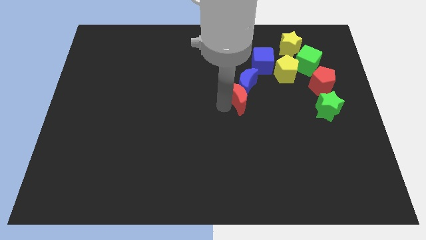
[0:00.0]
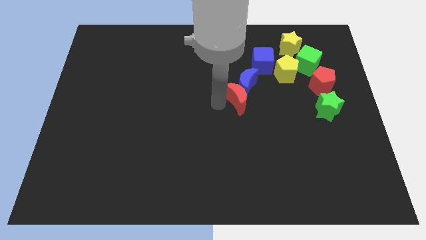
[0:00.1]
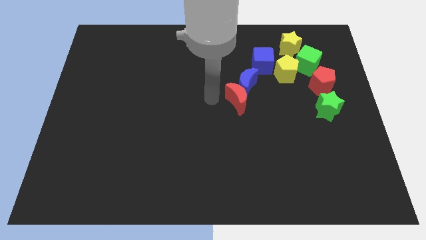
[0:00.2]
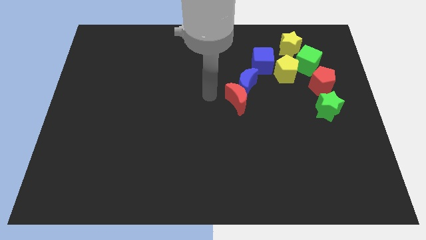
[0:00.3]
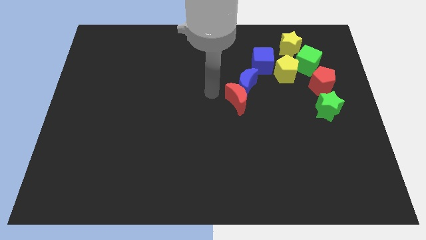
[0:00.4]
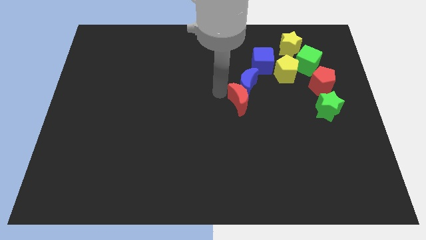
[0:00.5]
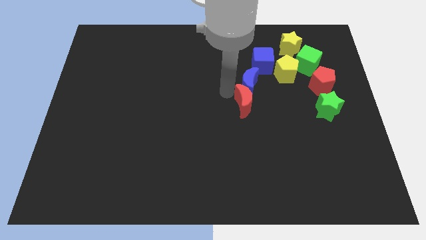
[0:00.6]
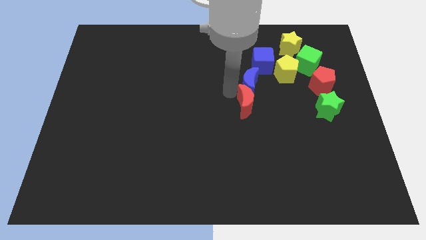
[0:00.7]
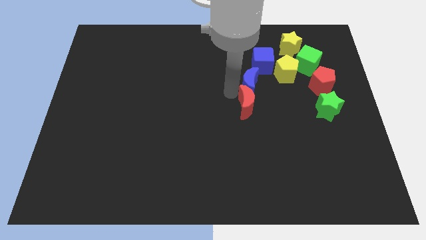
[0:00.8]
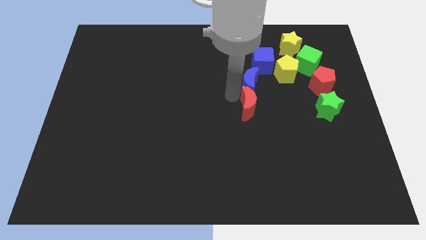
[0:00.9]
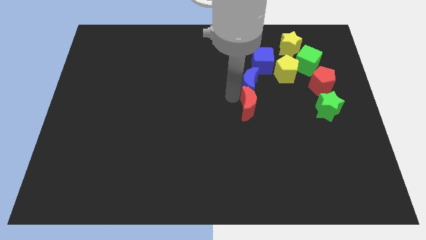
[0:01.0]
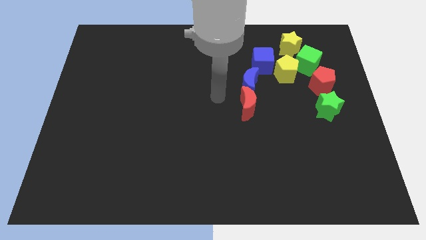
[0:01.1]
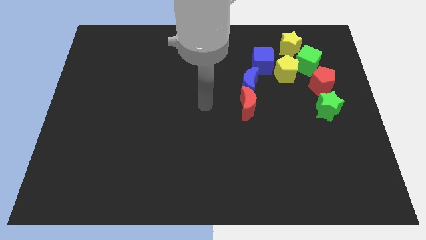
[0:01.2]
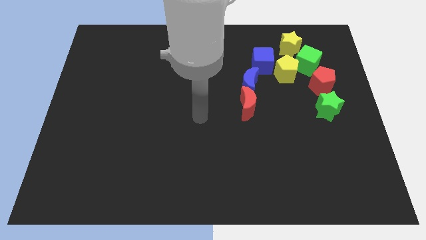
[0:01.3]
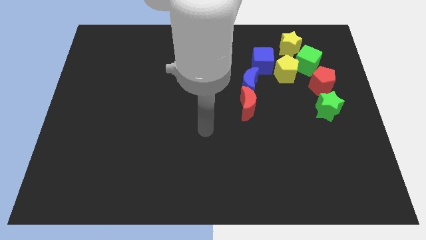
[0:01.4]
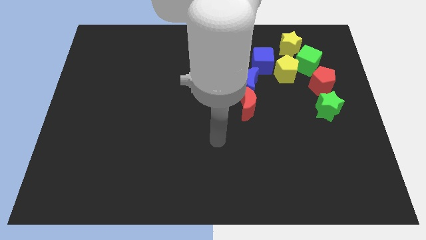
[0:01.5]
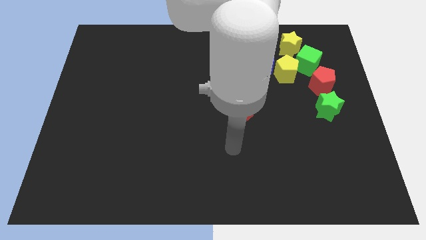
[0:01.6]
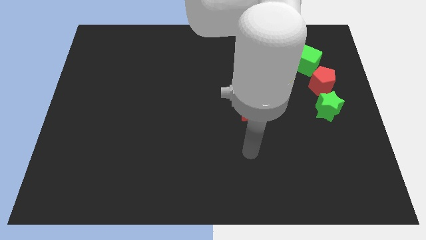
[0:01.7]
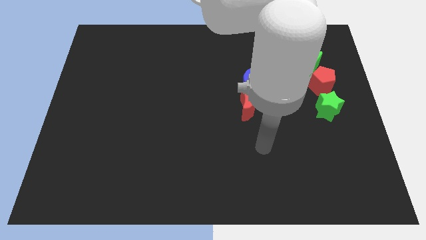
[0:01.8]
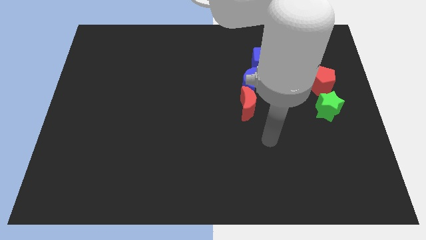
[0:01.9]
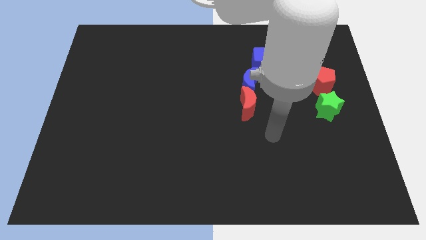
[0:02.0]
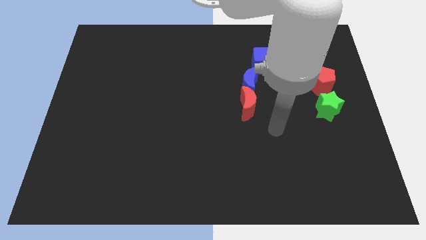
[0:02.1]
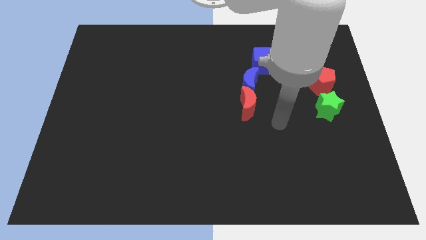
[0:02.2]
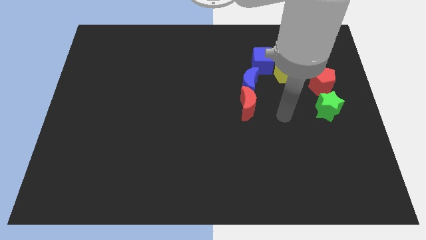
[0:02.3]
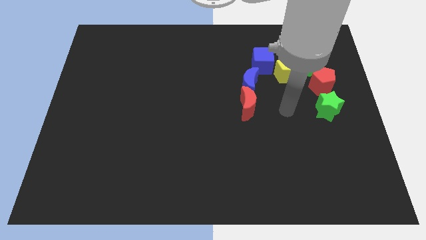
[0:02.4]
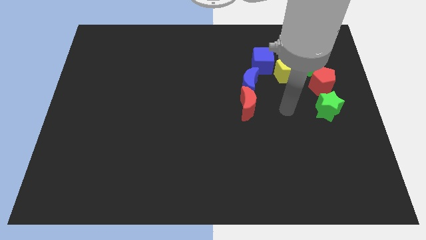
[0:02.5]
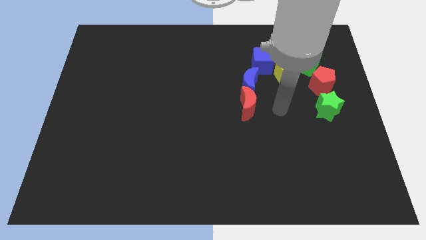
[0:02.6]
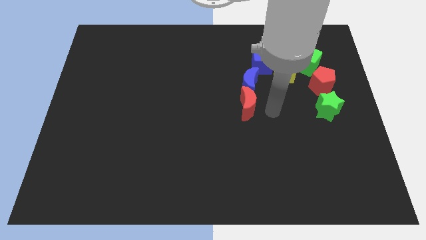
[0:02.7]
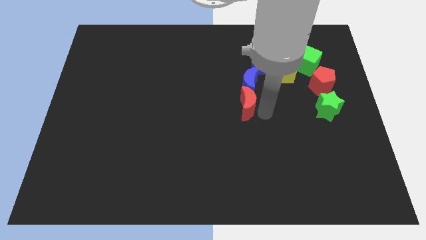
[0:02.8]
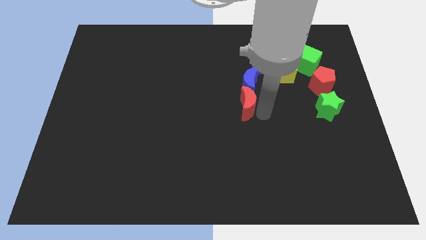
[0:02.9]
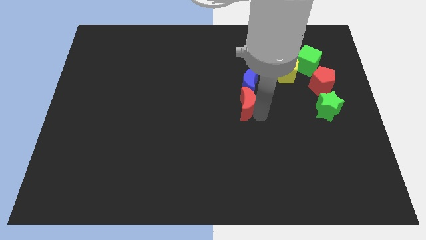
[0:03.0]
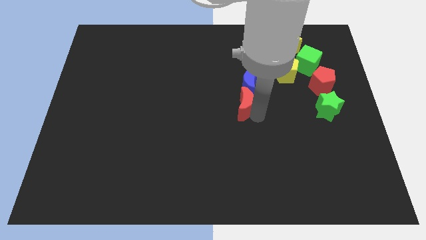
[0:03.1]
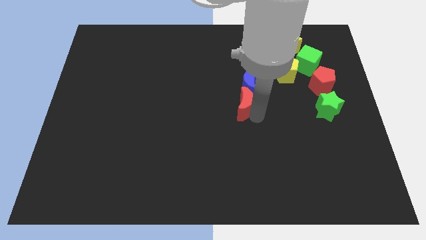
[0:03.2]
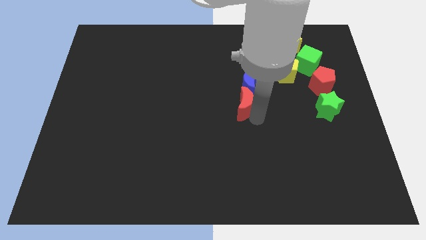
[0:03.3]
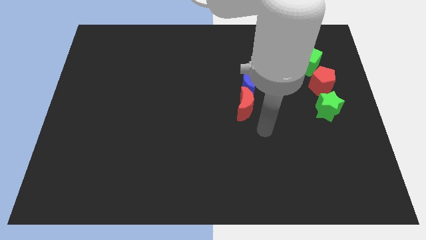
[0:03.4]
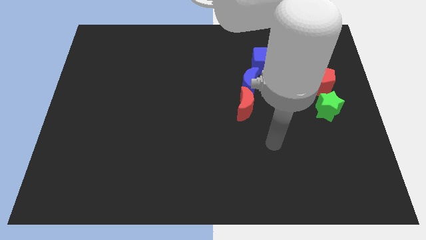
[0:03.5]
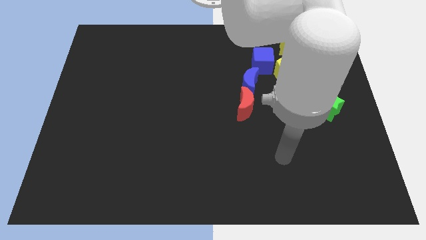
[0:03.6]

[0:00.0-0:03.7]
adjust the red crescent to the bottom of the blue crescent

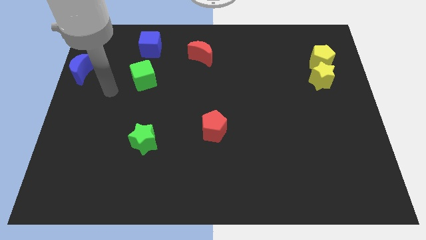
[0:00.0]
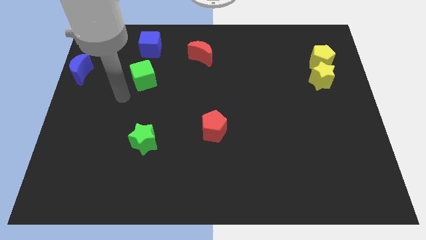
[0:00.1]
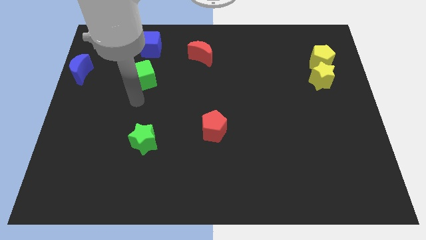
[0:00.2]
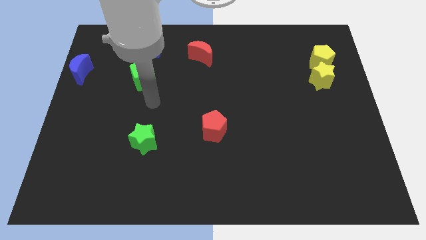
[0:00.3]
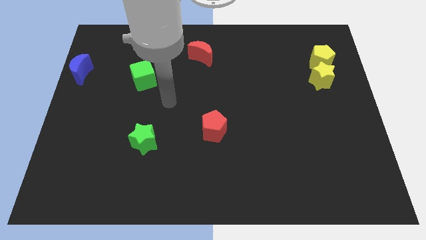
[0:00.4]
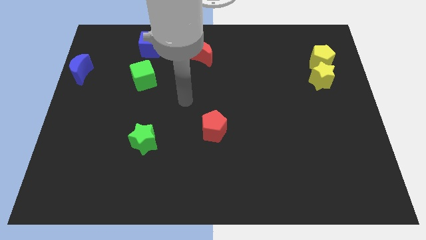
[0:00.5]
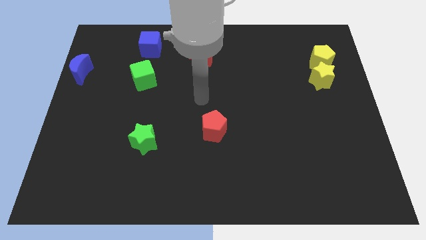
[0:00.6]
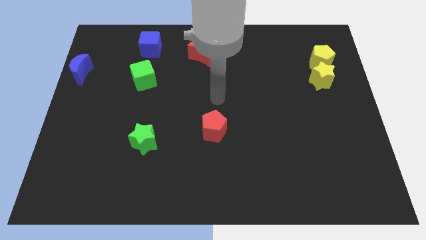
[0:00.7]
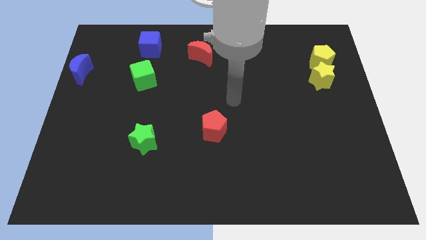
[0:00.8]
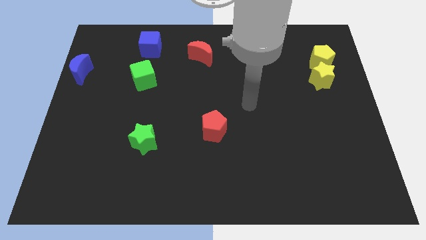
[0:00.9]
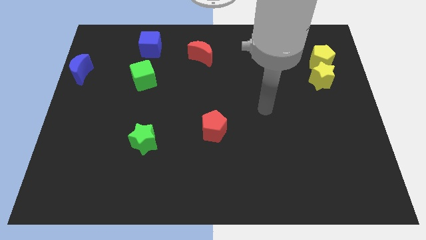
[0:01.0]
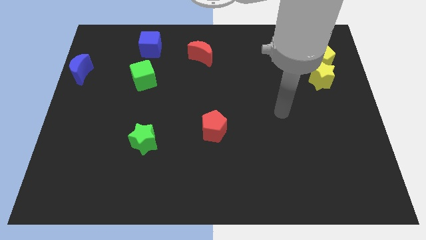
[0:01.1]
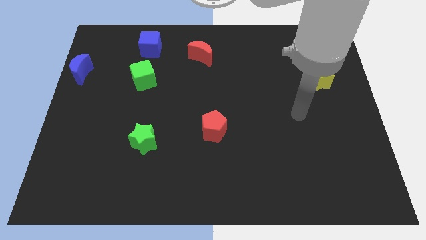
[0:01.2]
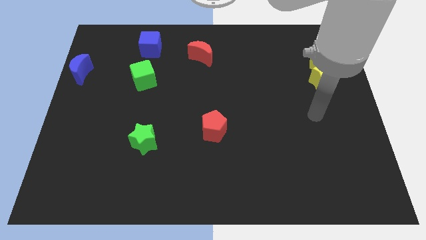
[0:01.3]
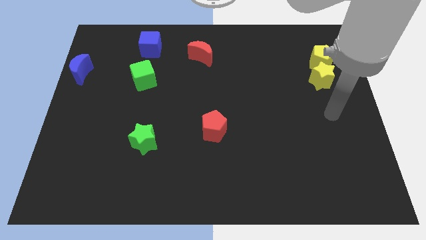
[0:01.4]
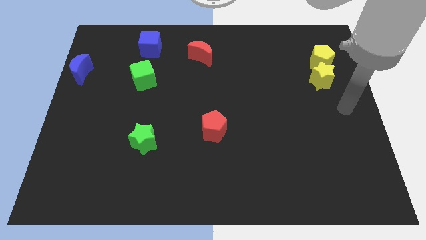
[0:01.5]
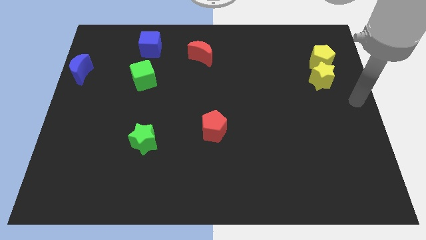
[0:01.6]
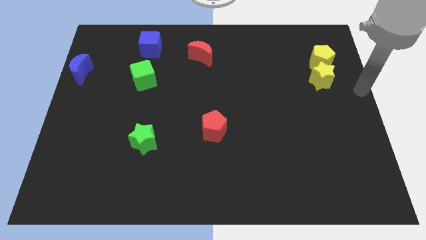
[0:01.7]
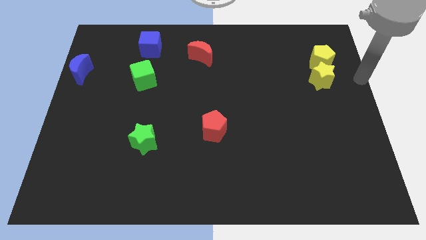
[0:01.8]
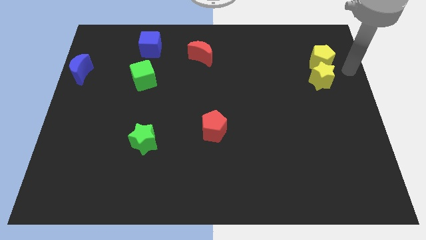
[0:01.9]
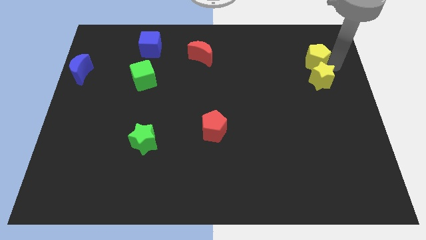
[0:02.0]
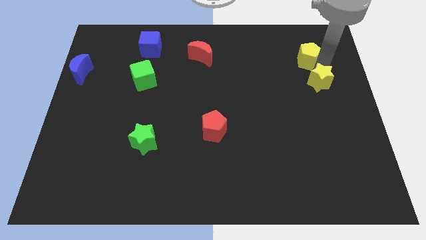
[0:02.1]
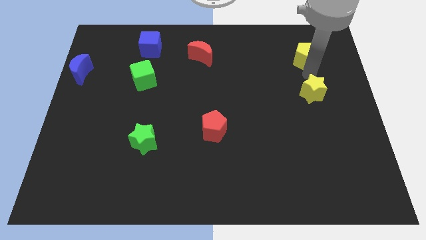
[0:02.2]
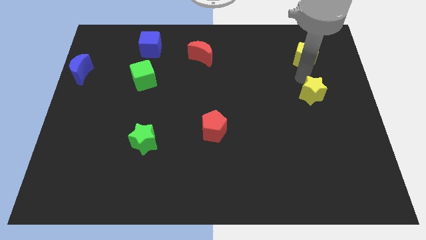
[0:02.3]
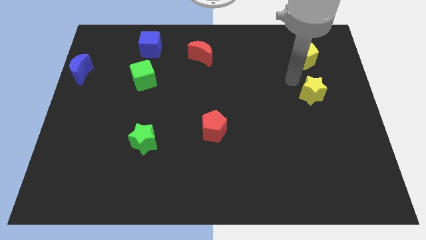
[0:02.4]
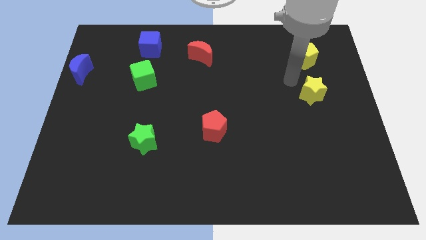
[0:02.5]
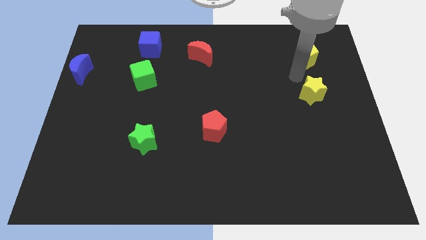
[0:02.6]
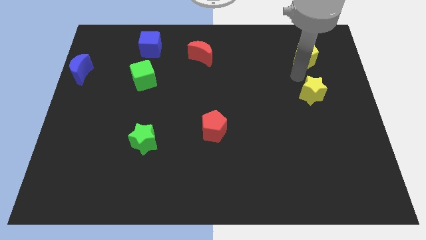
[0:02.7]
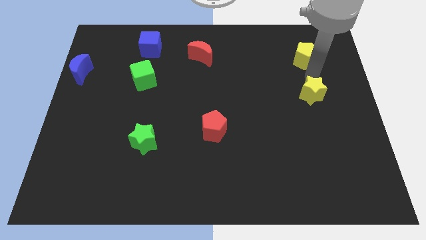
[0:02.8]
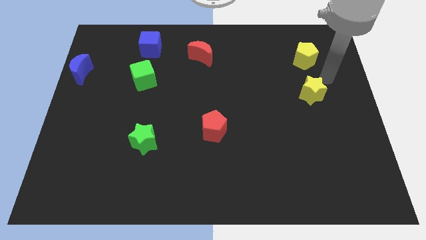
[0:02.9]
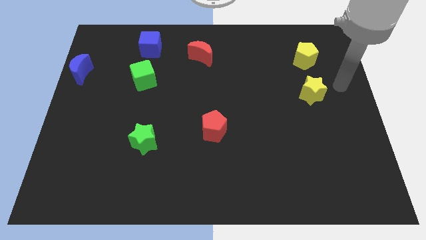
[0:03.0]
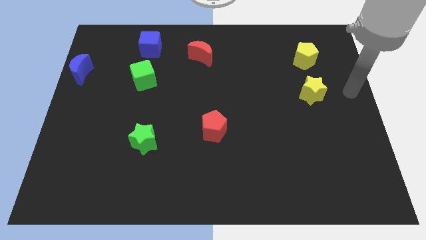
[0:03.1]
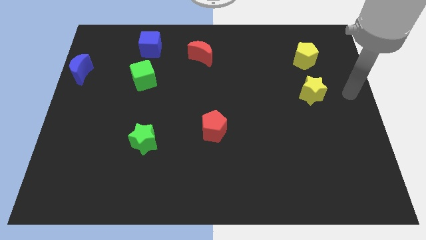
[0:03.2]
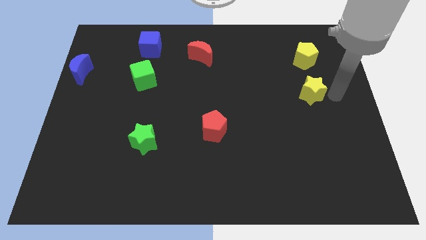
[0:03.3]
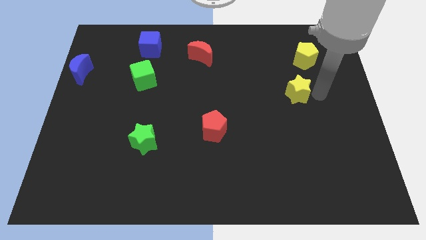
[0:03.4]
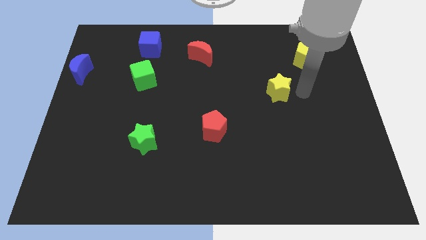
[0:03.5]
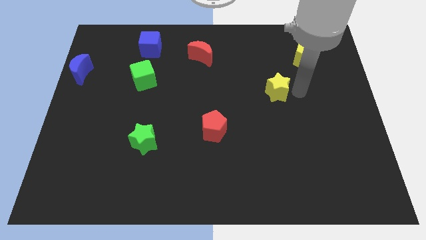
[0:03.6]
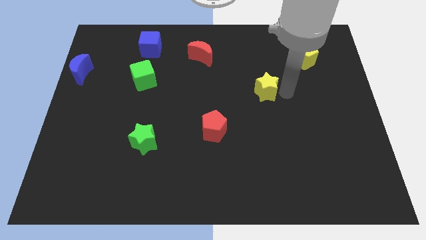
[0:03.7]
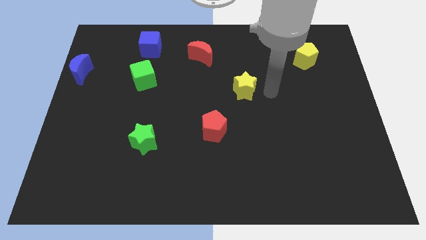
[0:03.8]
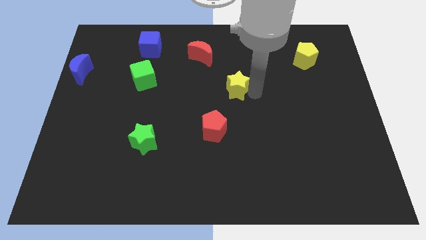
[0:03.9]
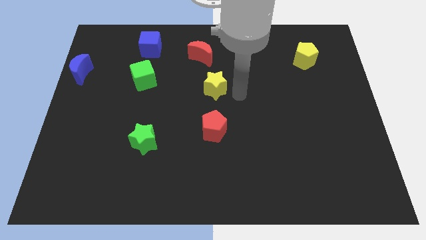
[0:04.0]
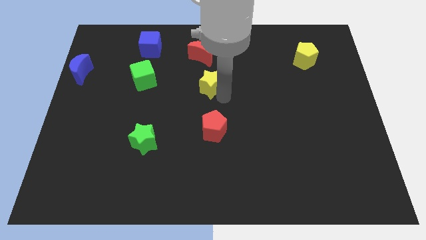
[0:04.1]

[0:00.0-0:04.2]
push the yellow star to the center of the board

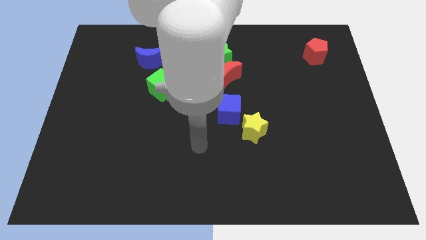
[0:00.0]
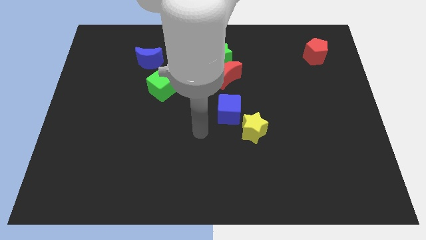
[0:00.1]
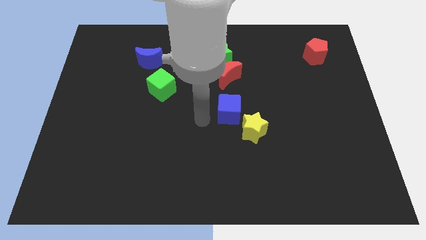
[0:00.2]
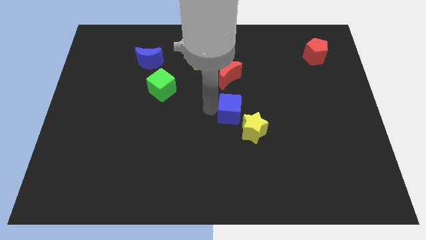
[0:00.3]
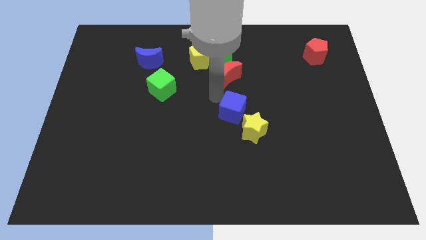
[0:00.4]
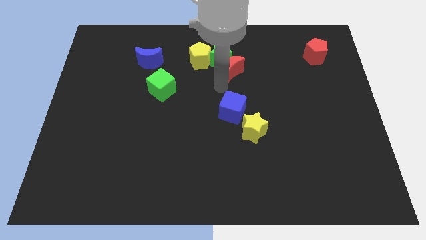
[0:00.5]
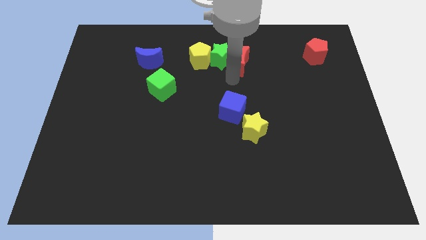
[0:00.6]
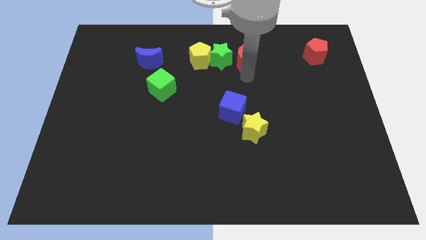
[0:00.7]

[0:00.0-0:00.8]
slightly move the red crescent to the right of the green star

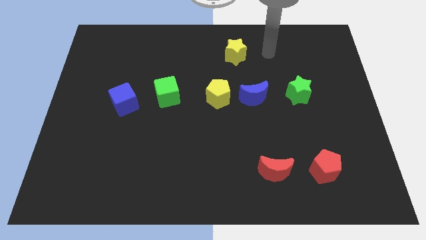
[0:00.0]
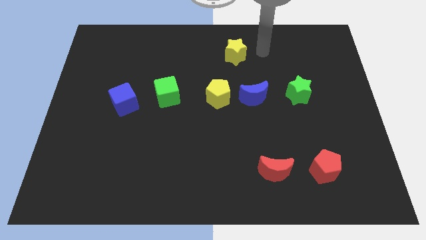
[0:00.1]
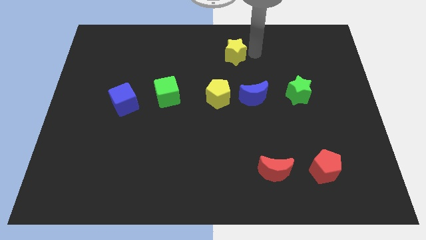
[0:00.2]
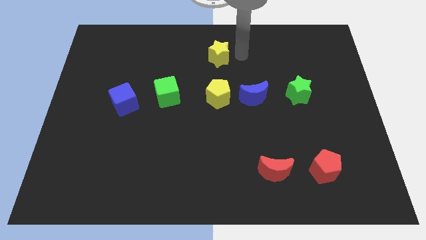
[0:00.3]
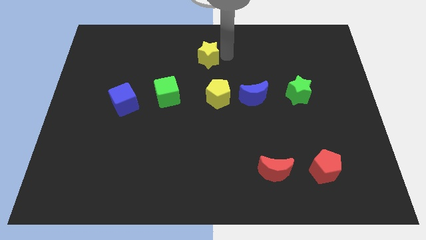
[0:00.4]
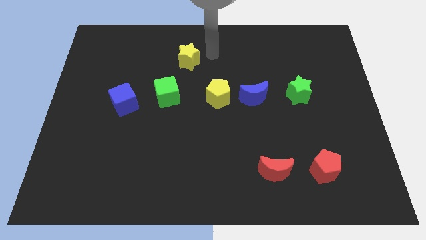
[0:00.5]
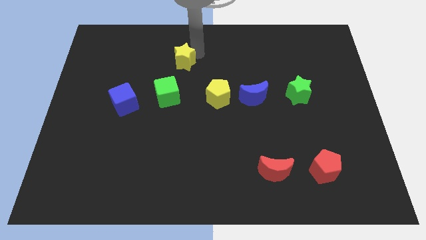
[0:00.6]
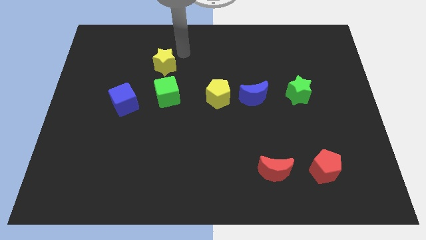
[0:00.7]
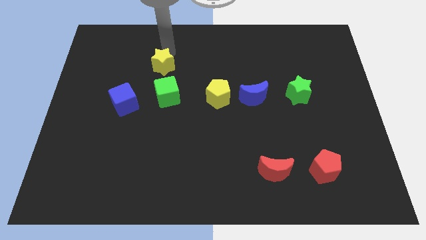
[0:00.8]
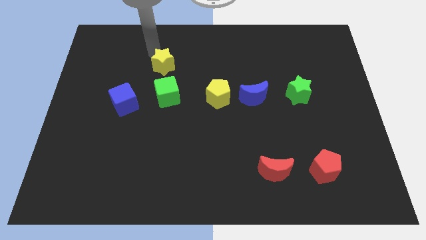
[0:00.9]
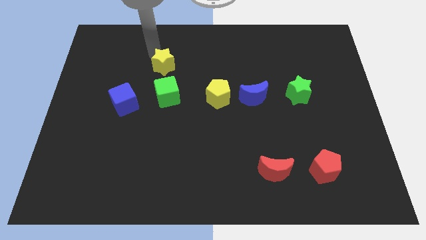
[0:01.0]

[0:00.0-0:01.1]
slide yellow star on top of green cube
